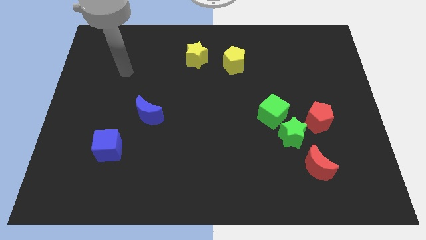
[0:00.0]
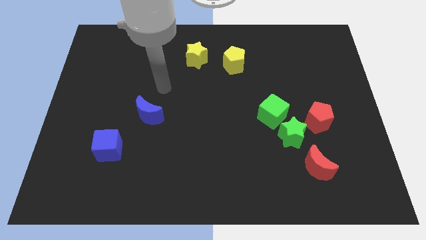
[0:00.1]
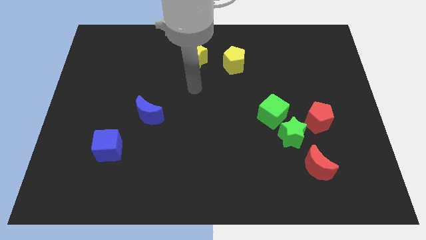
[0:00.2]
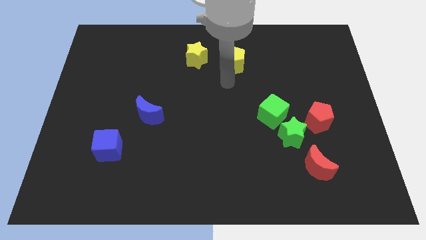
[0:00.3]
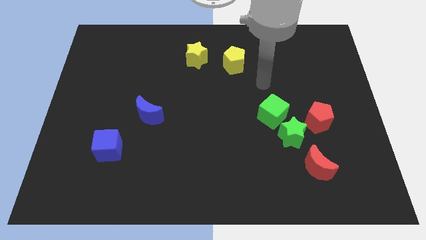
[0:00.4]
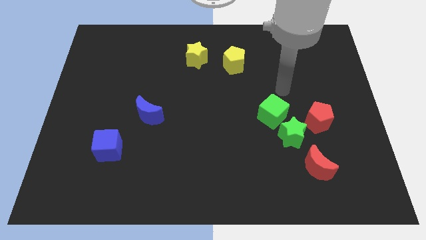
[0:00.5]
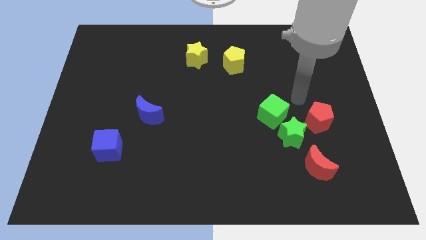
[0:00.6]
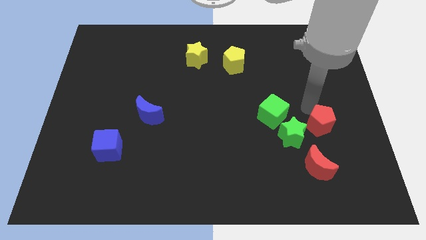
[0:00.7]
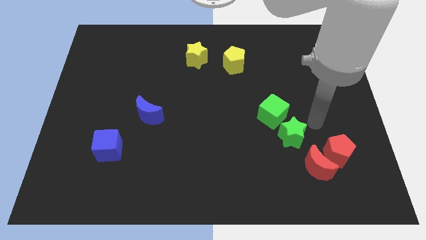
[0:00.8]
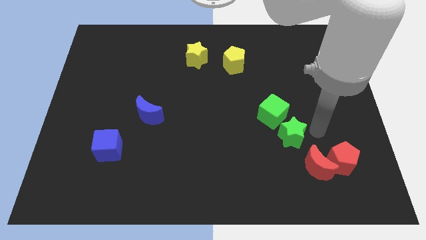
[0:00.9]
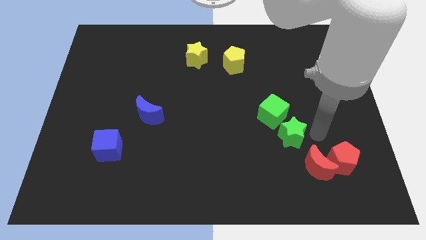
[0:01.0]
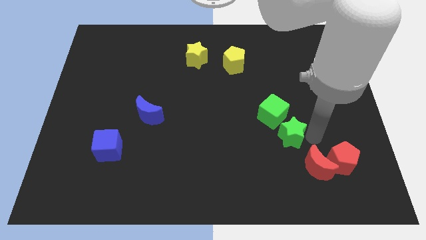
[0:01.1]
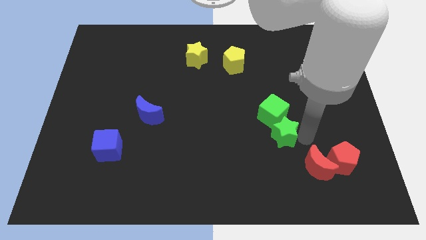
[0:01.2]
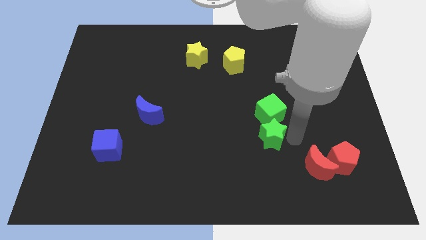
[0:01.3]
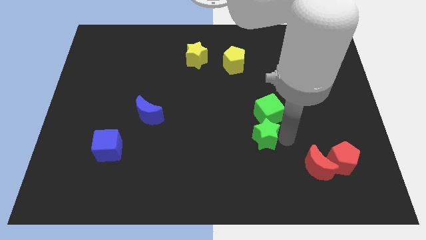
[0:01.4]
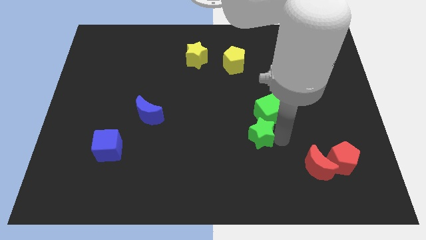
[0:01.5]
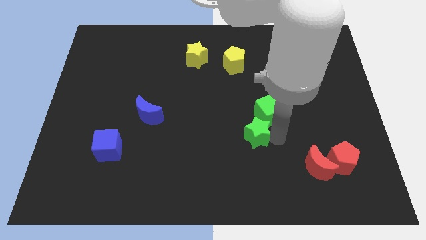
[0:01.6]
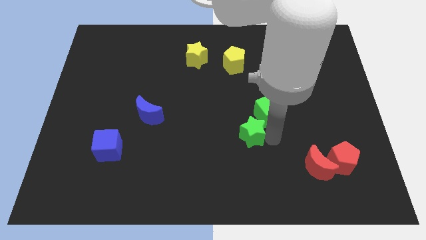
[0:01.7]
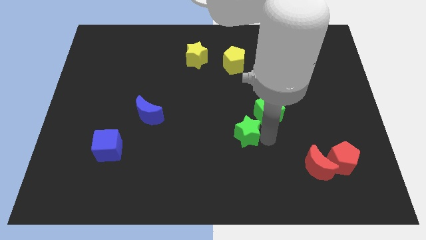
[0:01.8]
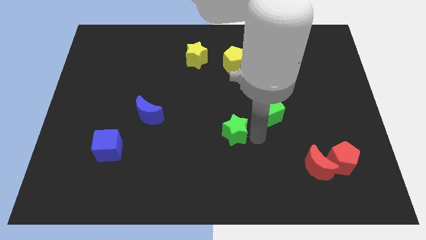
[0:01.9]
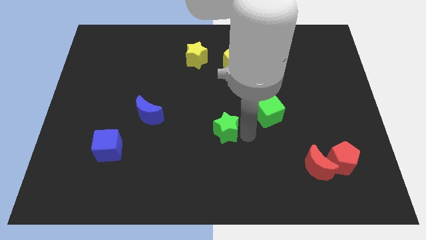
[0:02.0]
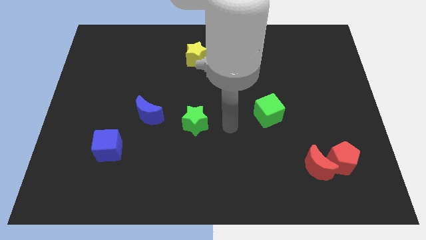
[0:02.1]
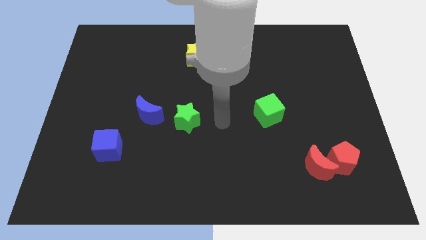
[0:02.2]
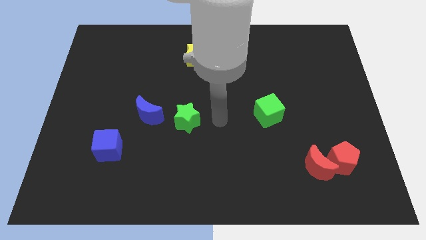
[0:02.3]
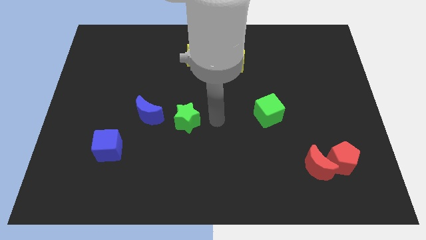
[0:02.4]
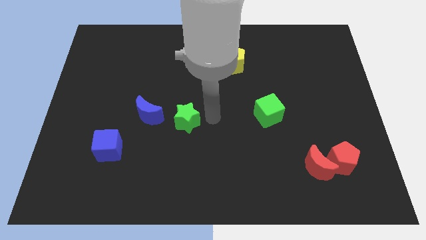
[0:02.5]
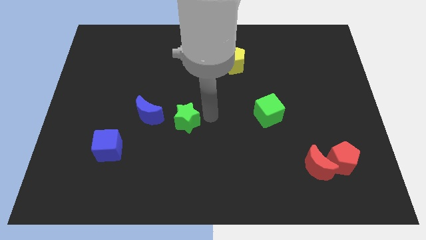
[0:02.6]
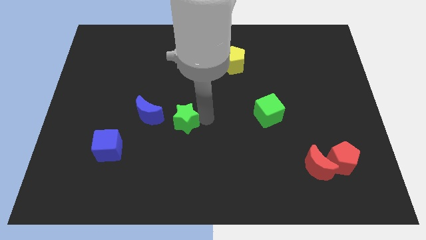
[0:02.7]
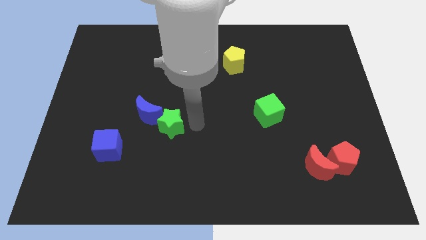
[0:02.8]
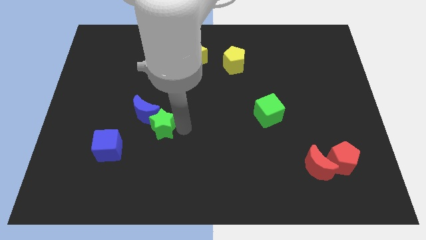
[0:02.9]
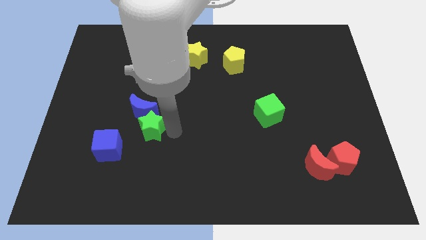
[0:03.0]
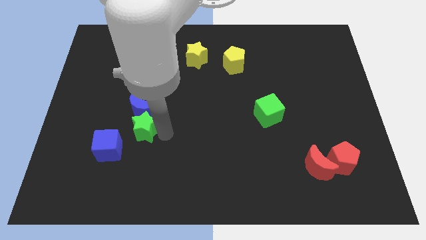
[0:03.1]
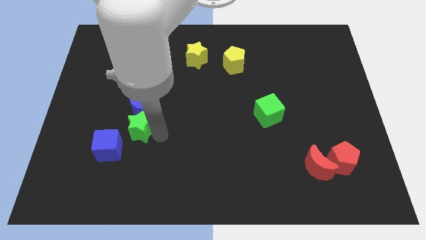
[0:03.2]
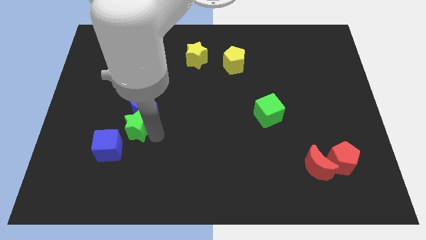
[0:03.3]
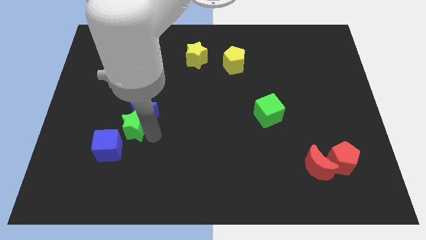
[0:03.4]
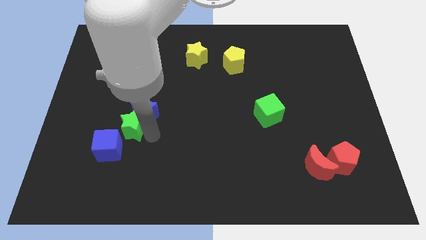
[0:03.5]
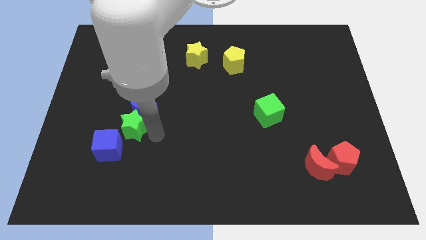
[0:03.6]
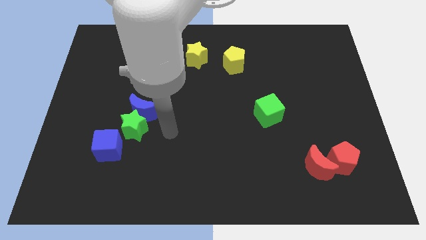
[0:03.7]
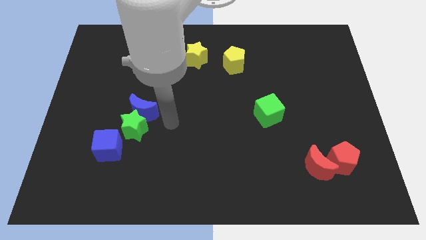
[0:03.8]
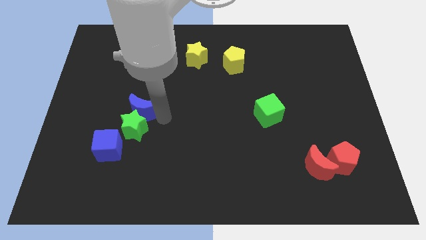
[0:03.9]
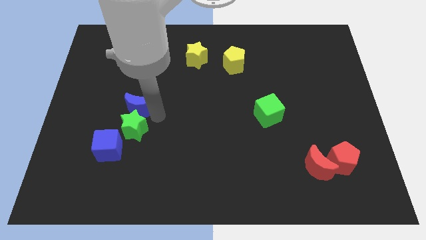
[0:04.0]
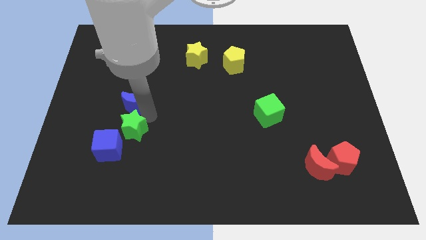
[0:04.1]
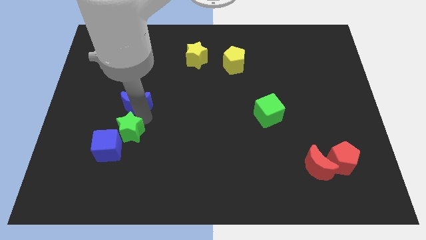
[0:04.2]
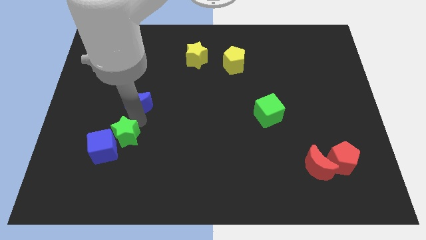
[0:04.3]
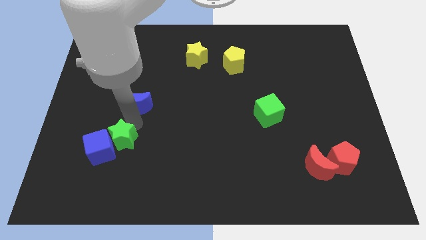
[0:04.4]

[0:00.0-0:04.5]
slide the green star close to the blue cube

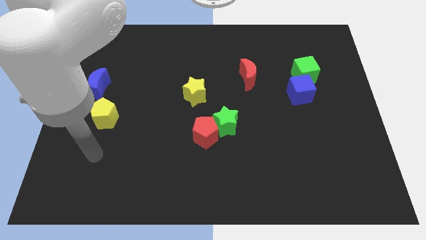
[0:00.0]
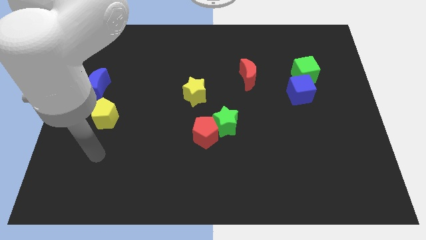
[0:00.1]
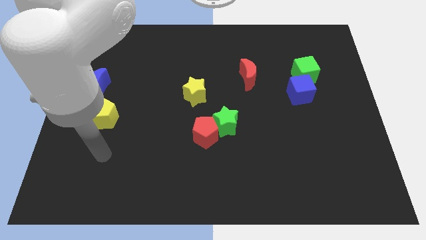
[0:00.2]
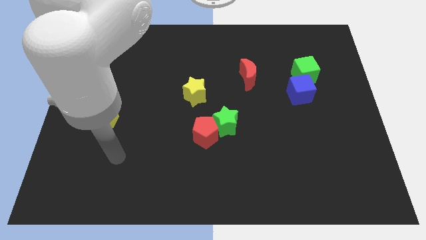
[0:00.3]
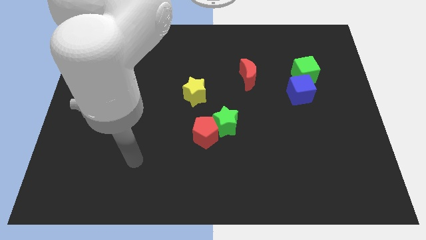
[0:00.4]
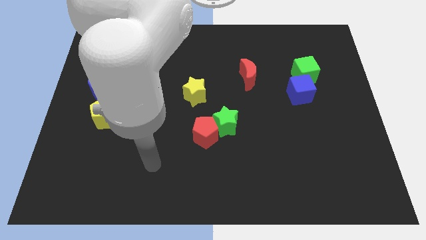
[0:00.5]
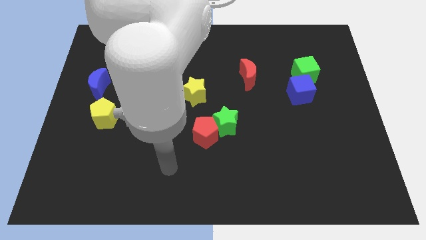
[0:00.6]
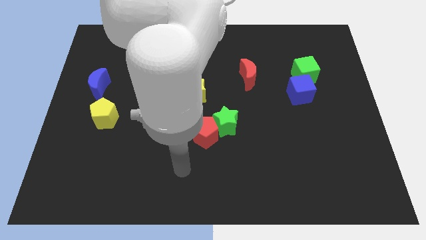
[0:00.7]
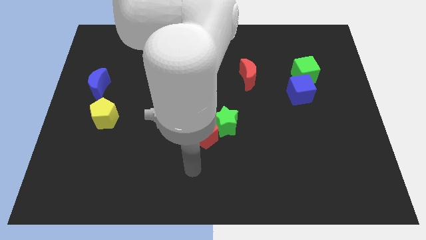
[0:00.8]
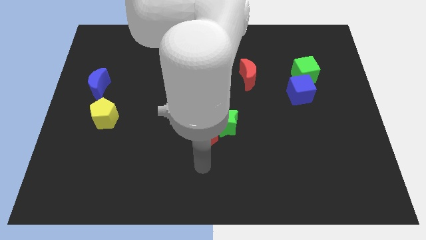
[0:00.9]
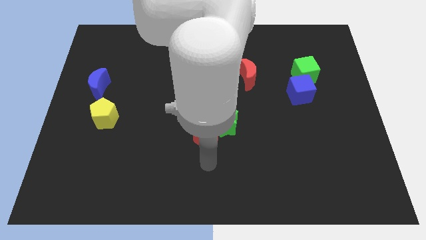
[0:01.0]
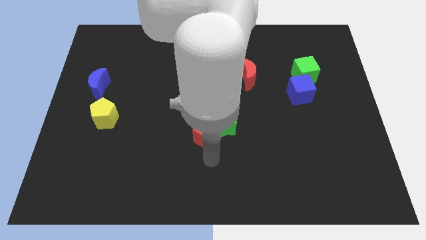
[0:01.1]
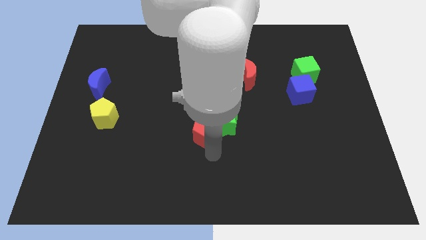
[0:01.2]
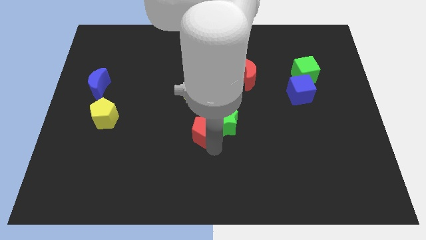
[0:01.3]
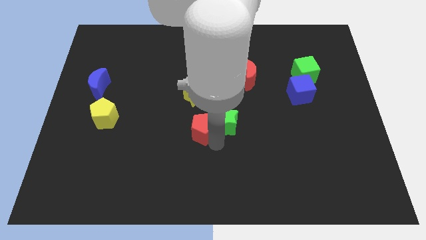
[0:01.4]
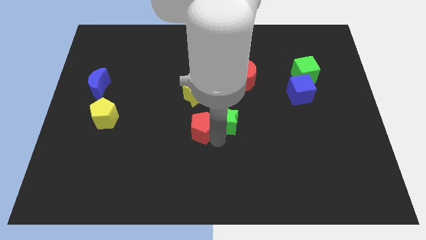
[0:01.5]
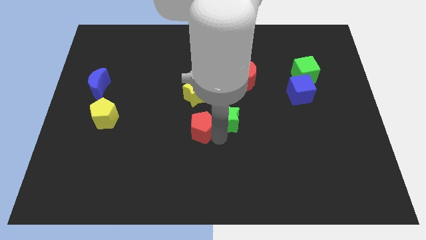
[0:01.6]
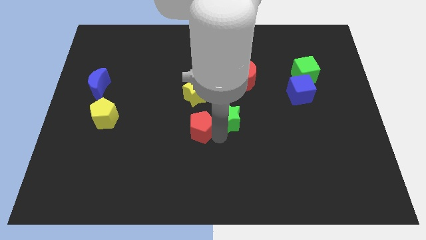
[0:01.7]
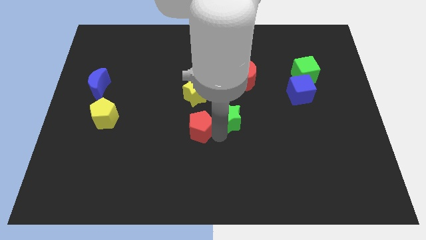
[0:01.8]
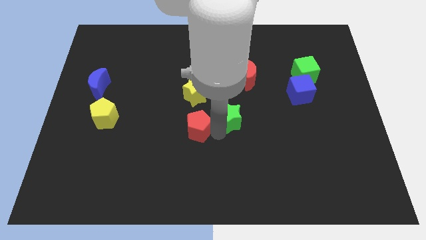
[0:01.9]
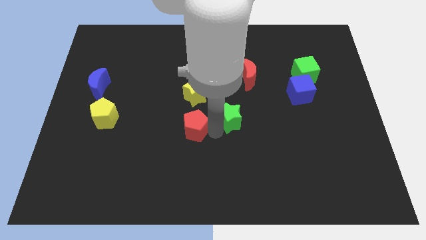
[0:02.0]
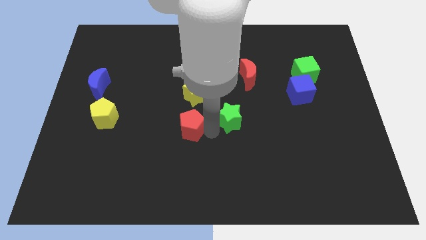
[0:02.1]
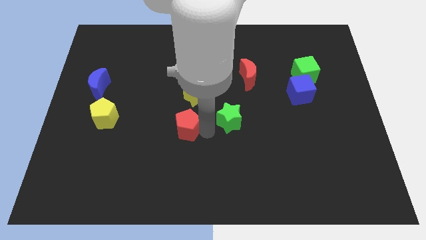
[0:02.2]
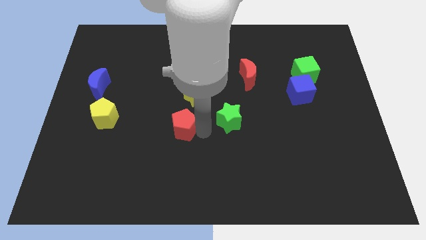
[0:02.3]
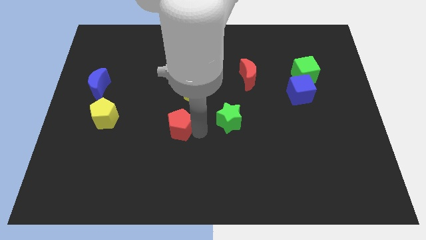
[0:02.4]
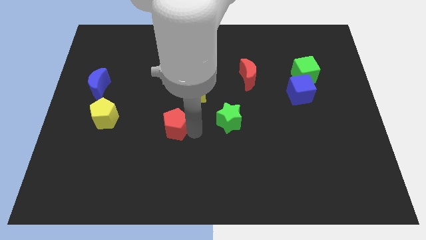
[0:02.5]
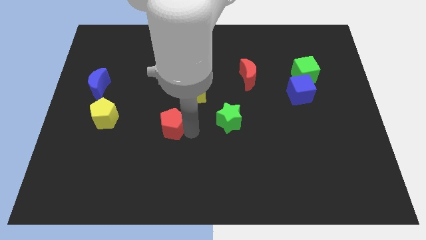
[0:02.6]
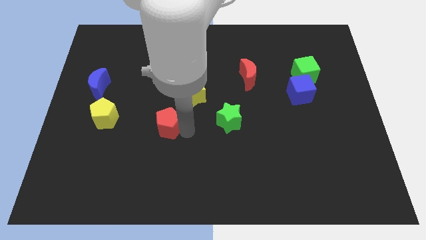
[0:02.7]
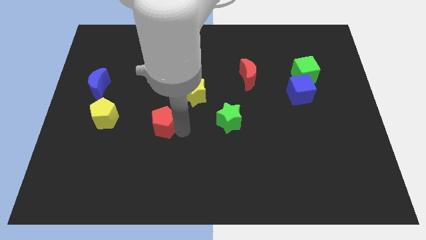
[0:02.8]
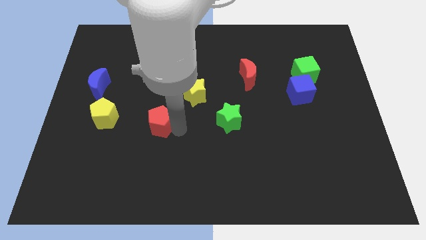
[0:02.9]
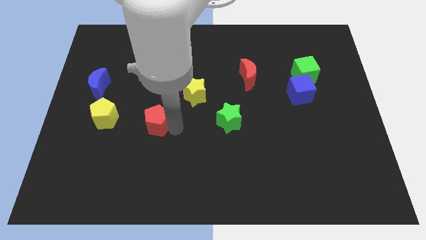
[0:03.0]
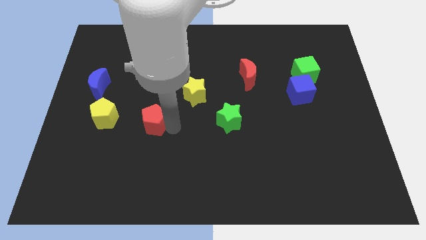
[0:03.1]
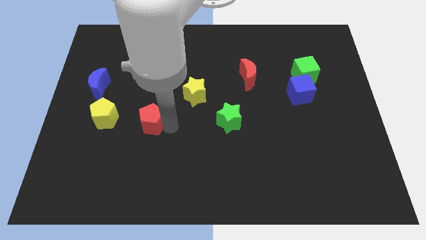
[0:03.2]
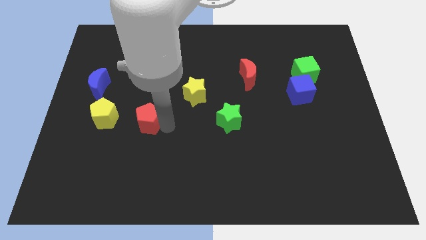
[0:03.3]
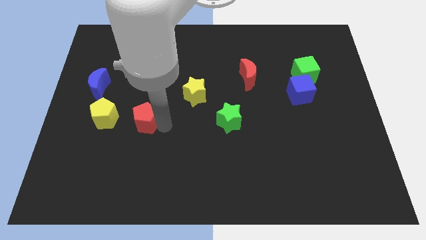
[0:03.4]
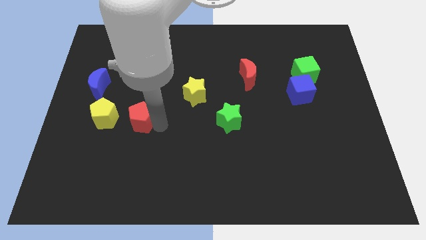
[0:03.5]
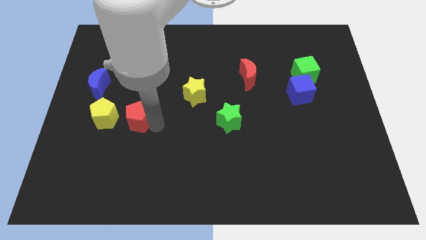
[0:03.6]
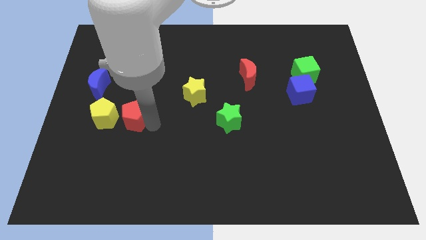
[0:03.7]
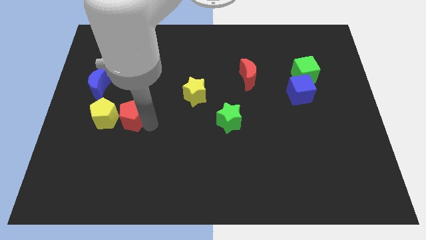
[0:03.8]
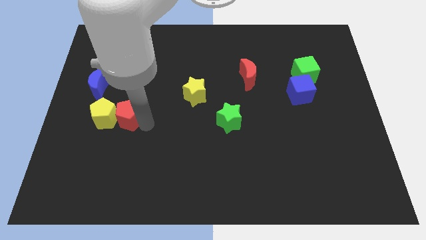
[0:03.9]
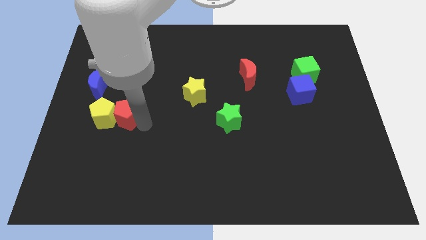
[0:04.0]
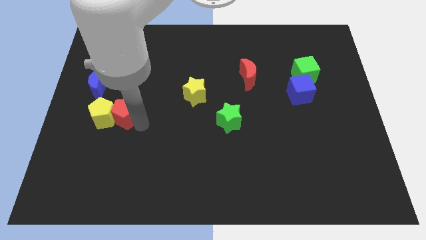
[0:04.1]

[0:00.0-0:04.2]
put the red pentagon next to the yellow pentagon
